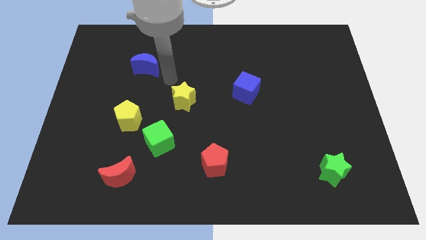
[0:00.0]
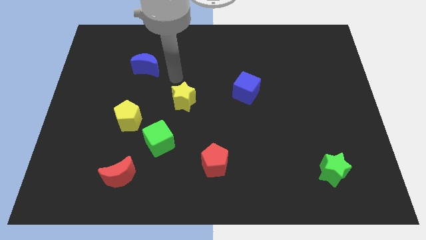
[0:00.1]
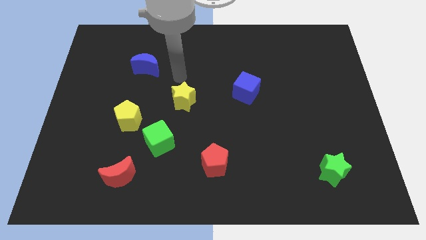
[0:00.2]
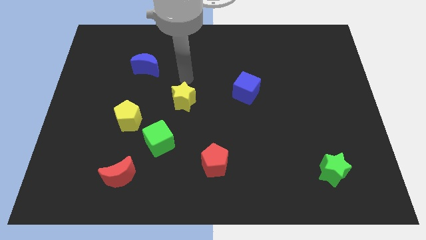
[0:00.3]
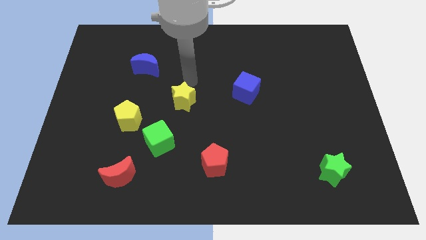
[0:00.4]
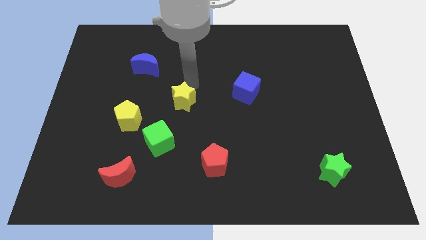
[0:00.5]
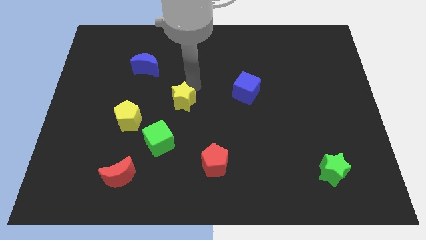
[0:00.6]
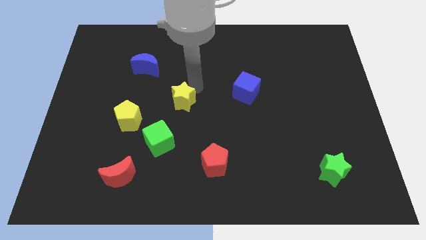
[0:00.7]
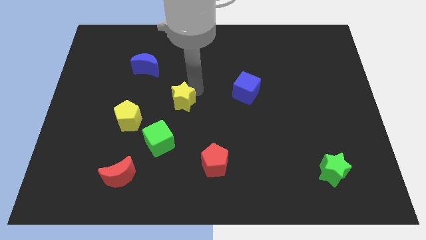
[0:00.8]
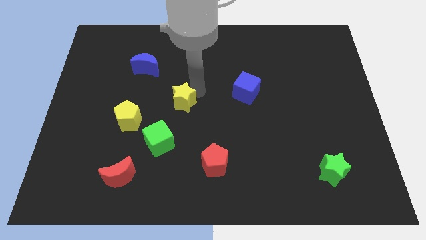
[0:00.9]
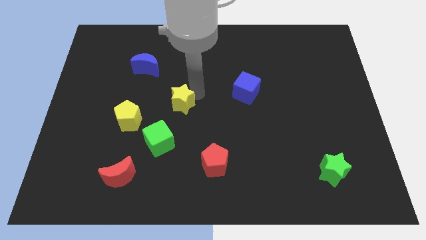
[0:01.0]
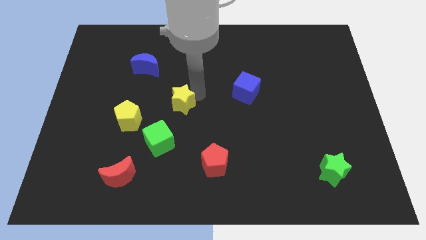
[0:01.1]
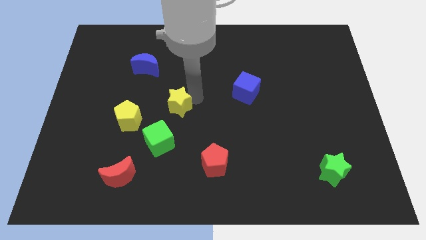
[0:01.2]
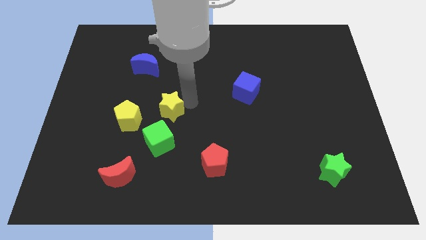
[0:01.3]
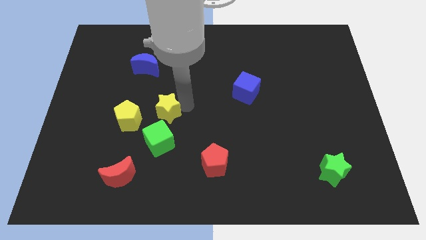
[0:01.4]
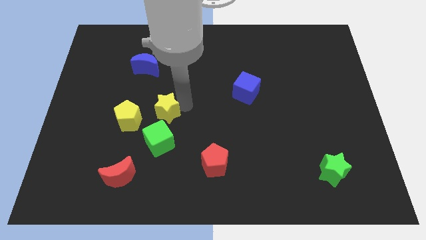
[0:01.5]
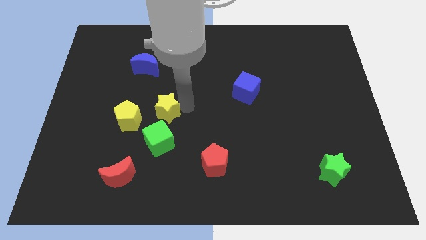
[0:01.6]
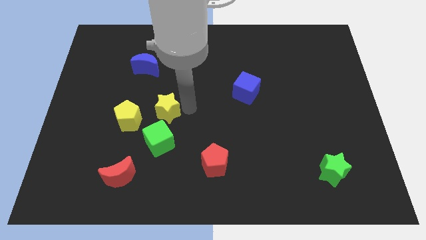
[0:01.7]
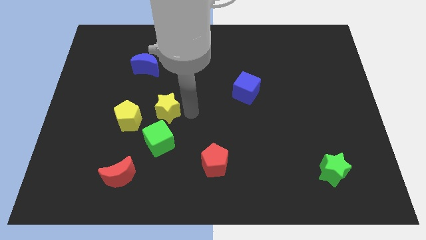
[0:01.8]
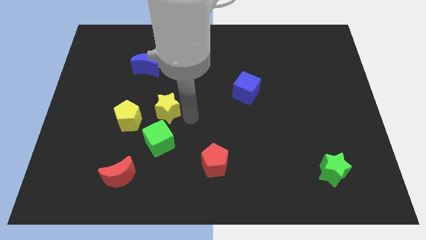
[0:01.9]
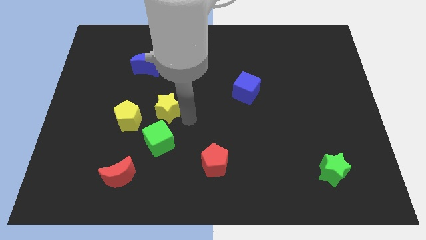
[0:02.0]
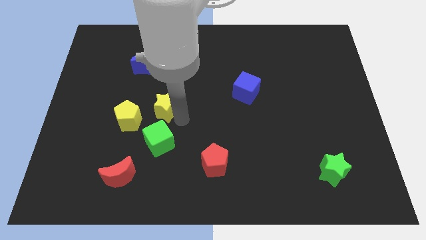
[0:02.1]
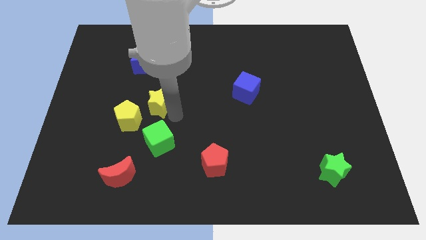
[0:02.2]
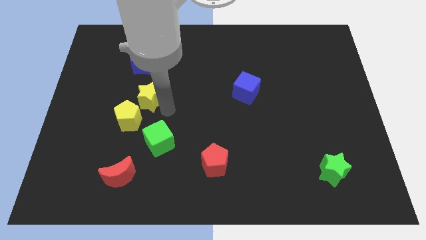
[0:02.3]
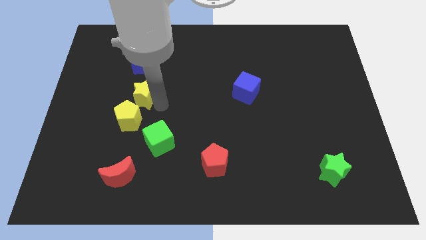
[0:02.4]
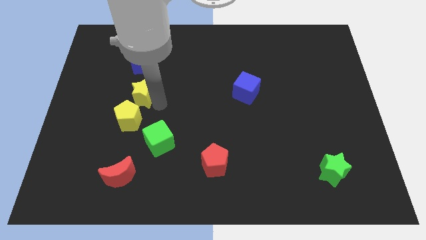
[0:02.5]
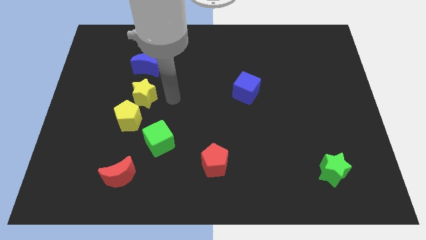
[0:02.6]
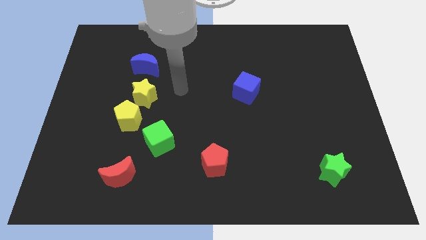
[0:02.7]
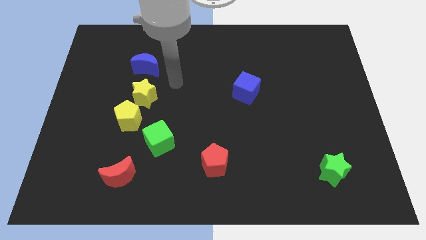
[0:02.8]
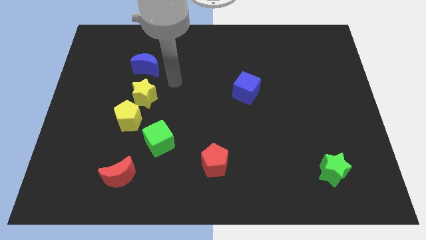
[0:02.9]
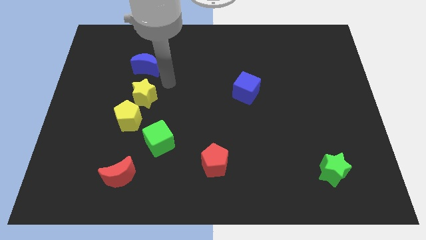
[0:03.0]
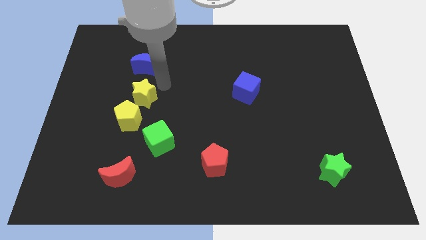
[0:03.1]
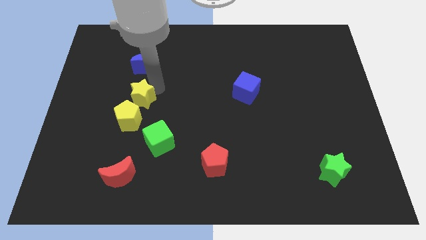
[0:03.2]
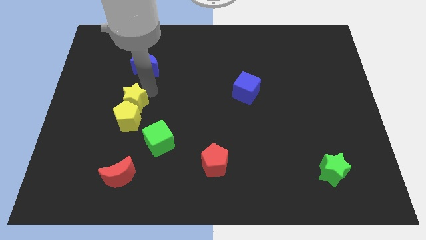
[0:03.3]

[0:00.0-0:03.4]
put the yellow star in between the yellow pentagon and blue moon

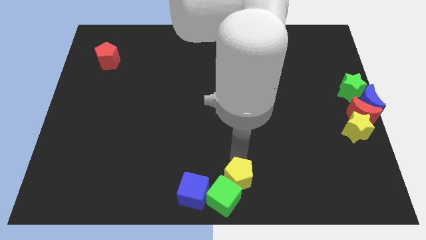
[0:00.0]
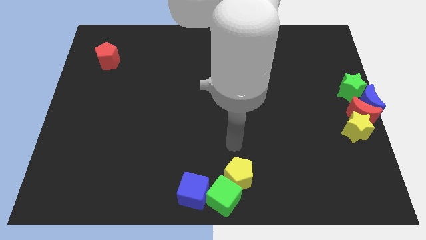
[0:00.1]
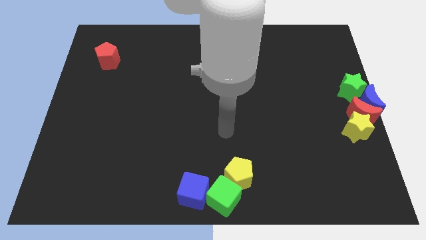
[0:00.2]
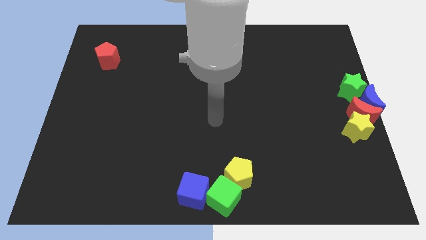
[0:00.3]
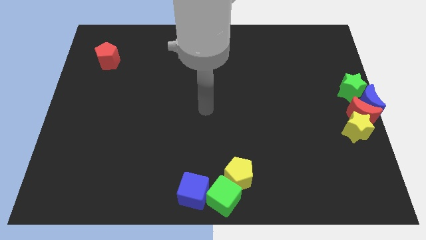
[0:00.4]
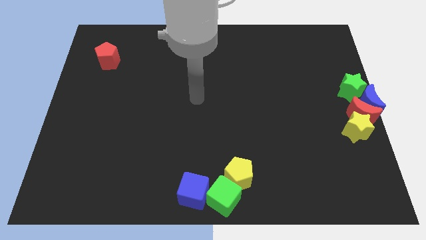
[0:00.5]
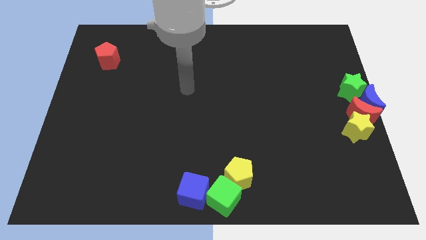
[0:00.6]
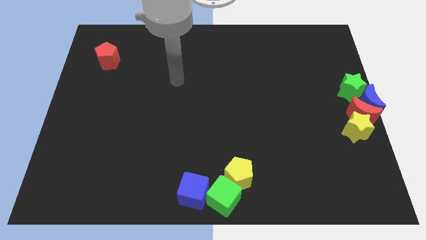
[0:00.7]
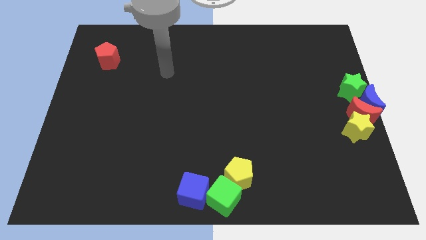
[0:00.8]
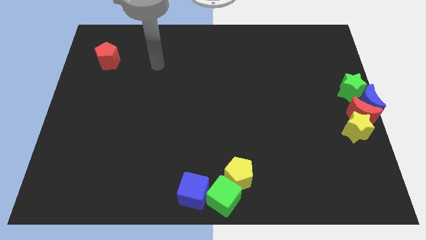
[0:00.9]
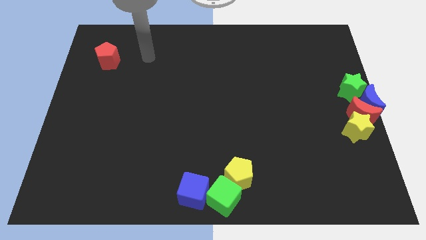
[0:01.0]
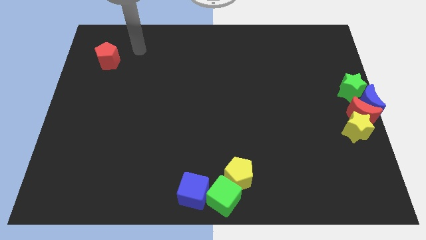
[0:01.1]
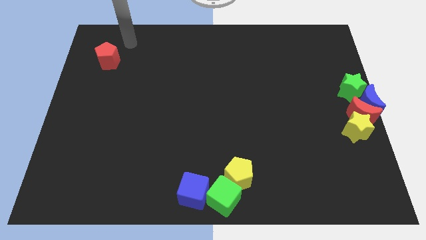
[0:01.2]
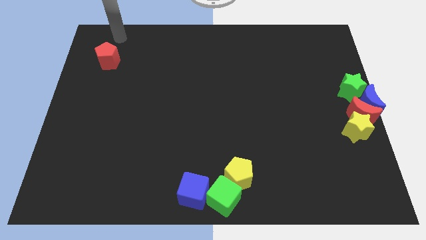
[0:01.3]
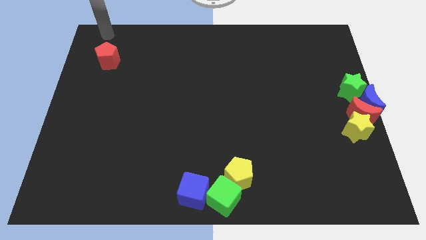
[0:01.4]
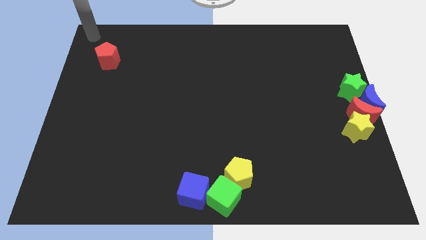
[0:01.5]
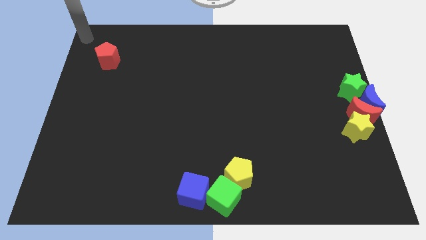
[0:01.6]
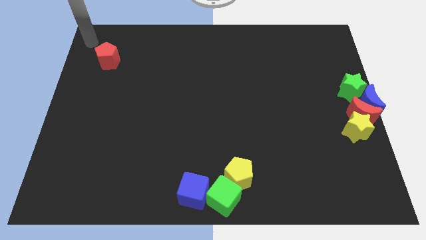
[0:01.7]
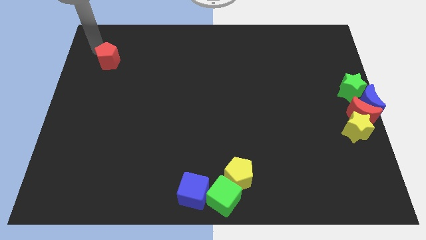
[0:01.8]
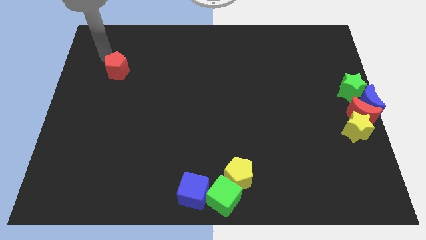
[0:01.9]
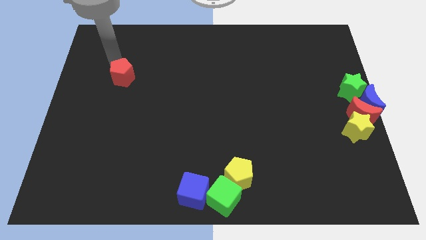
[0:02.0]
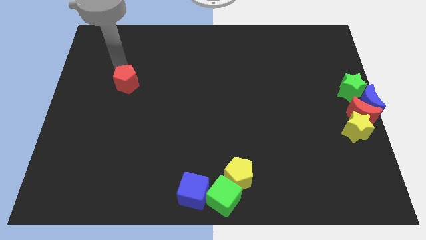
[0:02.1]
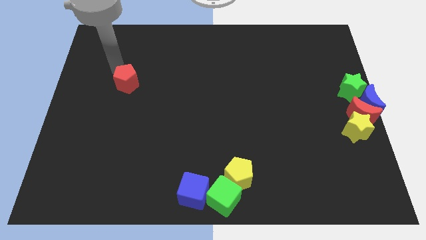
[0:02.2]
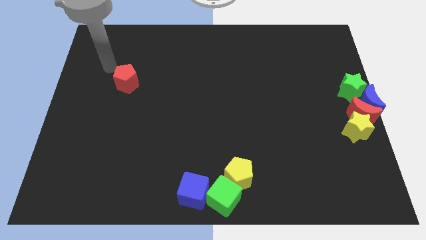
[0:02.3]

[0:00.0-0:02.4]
push the red pentagon slightly towards the blue cube

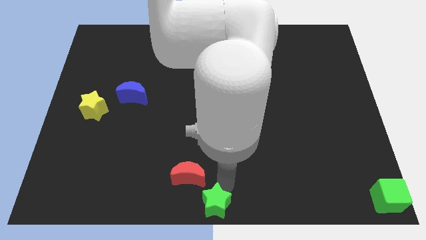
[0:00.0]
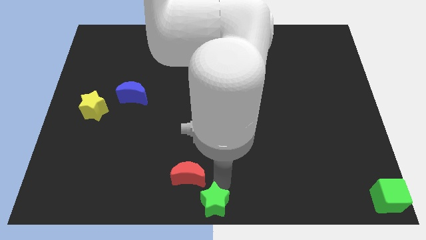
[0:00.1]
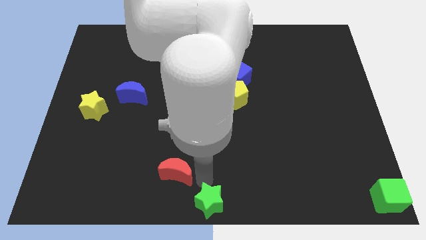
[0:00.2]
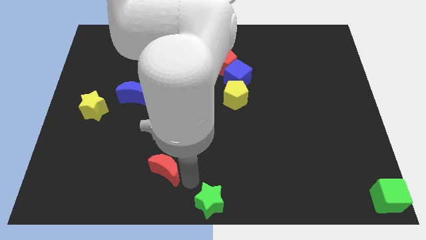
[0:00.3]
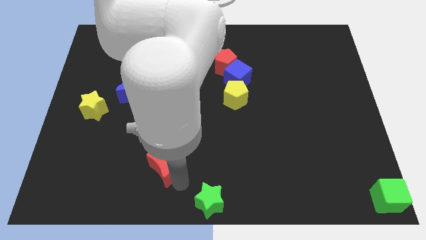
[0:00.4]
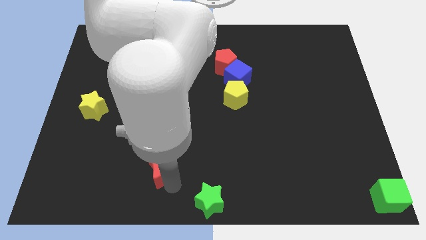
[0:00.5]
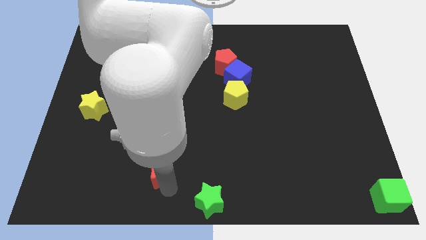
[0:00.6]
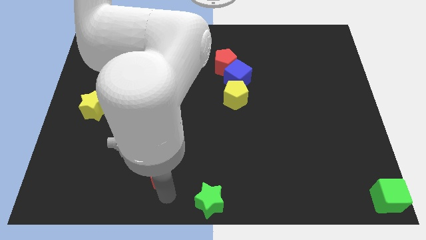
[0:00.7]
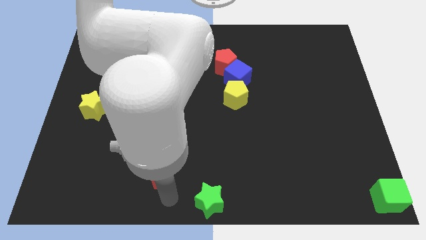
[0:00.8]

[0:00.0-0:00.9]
place the red moon to the left top of the green star

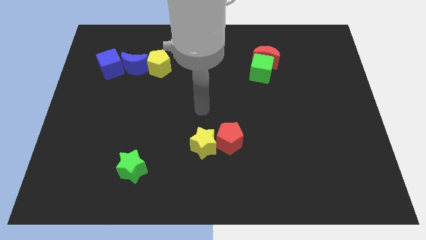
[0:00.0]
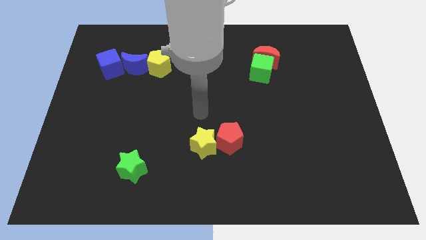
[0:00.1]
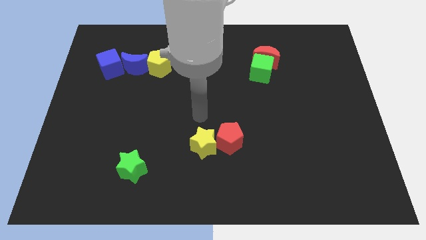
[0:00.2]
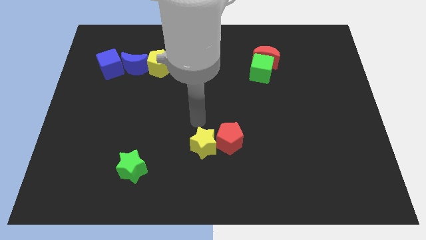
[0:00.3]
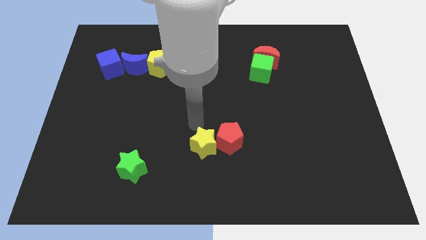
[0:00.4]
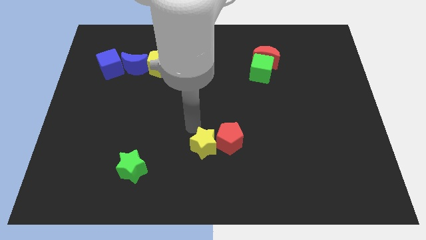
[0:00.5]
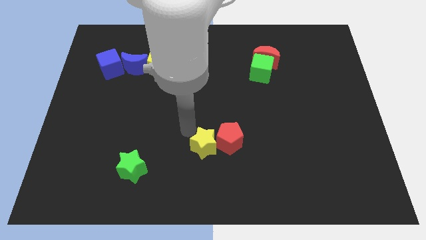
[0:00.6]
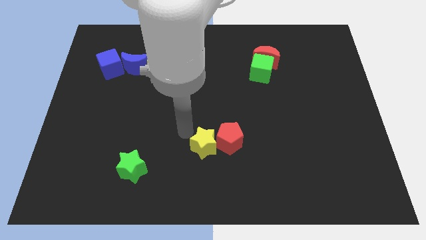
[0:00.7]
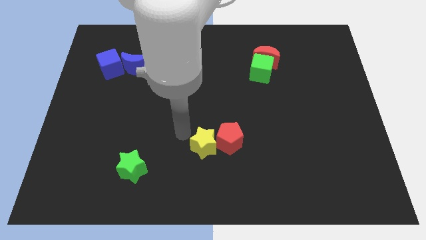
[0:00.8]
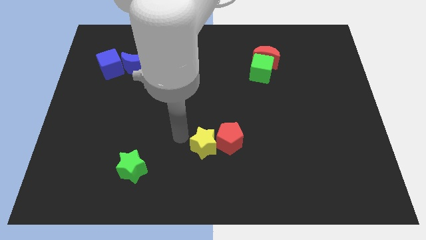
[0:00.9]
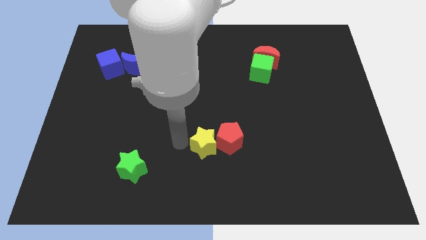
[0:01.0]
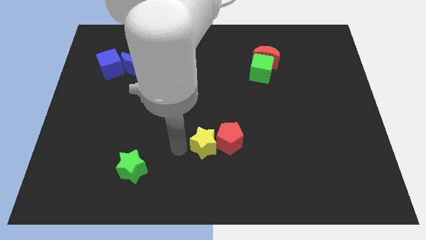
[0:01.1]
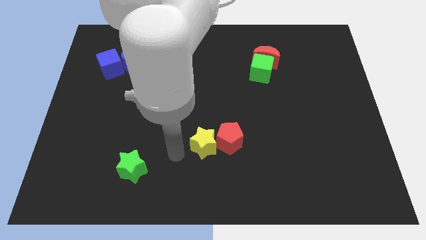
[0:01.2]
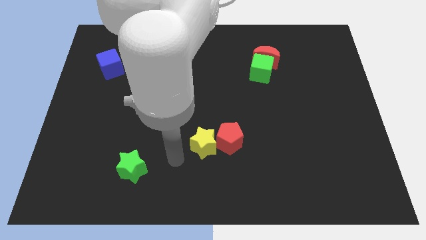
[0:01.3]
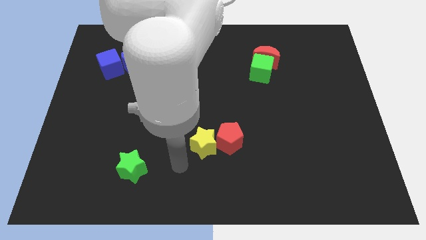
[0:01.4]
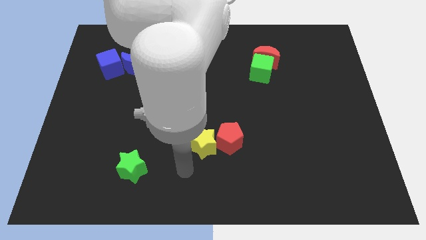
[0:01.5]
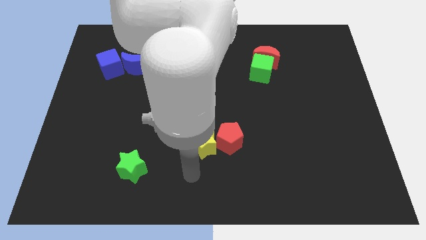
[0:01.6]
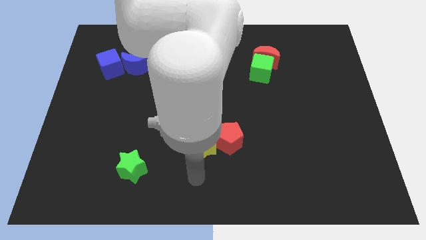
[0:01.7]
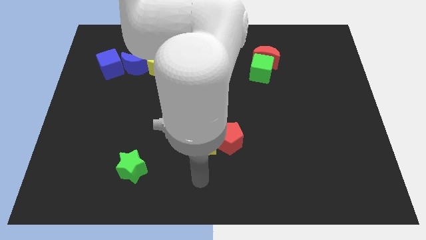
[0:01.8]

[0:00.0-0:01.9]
push the arm to the bottom center of the board

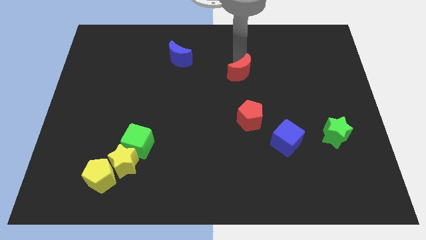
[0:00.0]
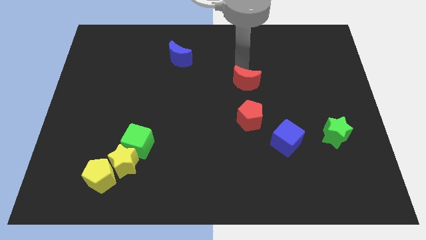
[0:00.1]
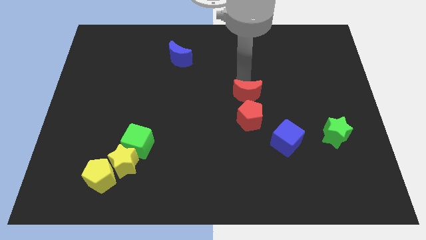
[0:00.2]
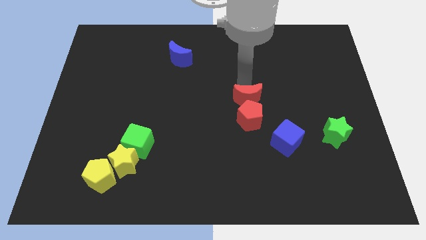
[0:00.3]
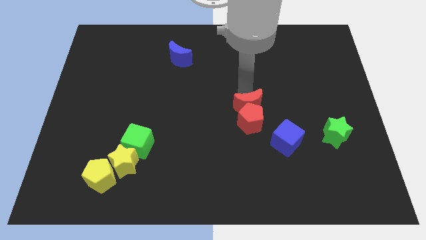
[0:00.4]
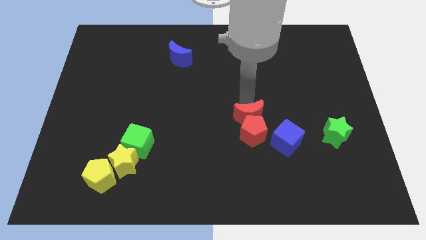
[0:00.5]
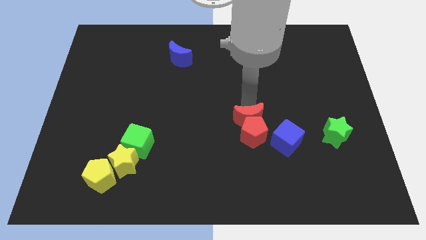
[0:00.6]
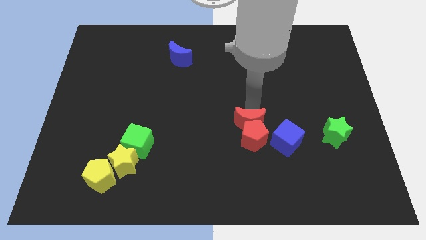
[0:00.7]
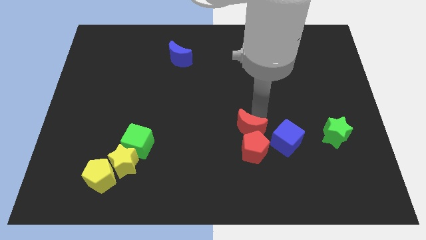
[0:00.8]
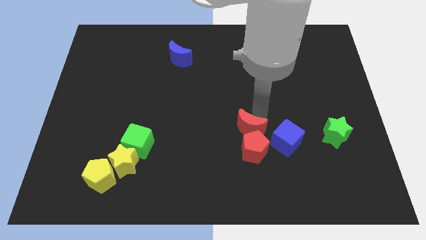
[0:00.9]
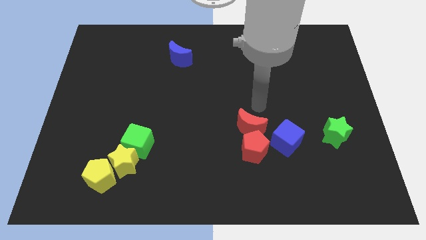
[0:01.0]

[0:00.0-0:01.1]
place the red blocks to the left side of blue cube
